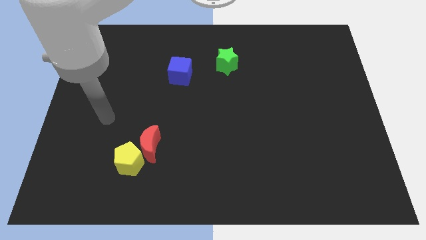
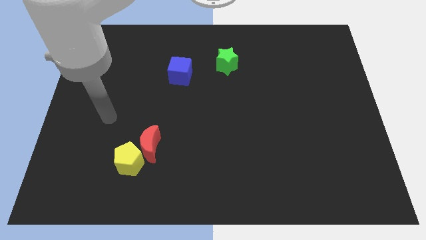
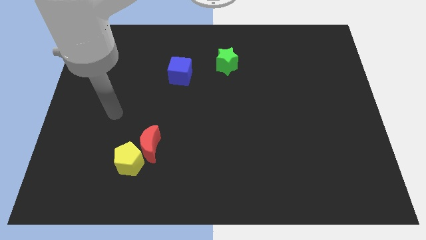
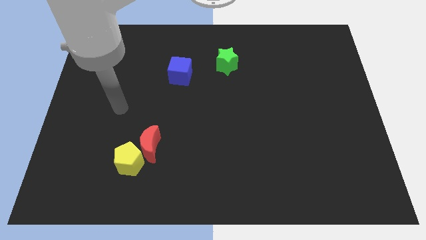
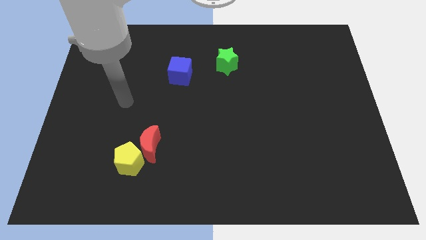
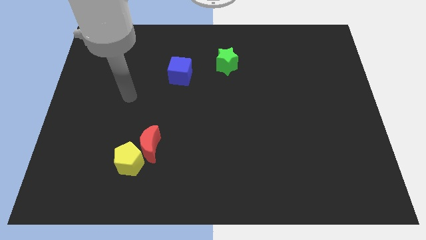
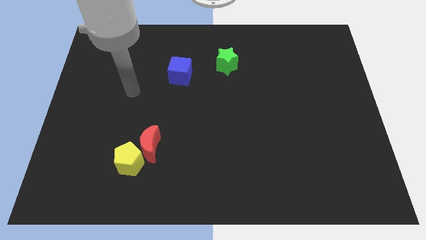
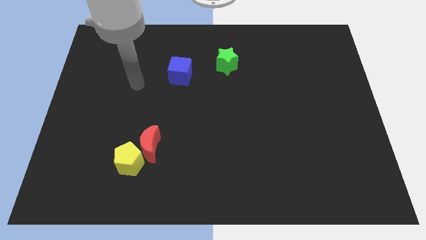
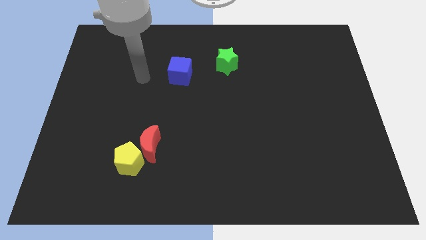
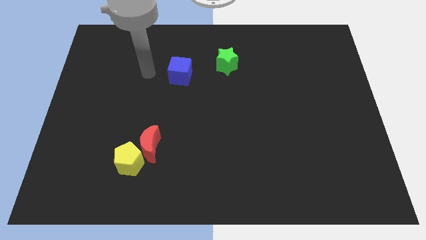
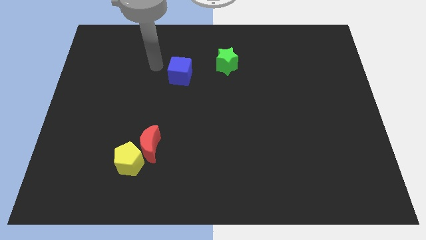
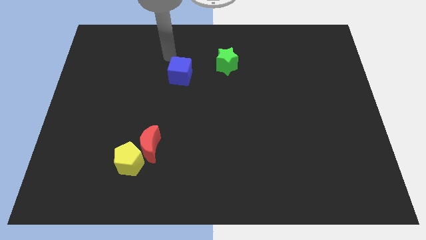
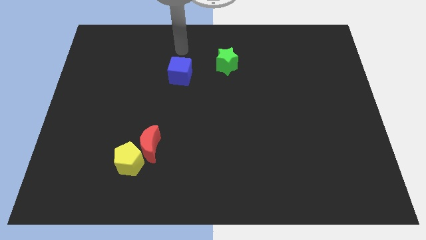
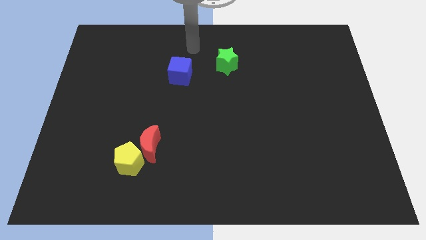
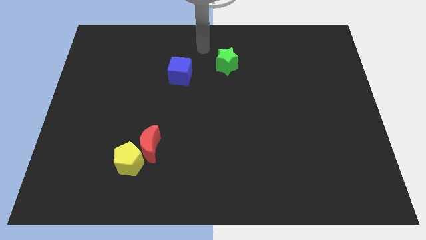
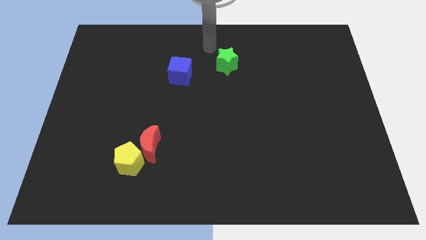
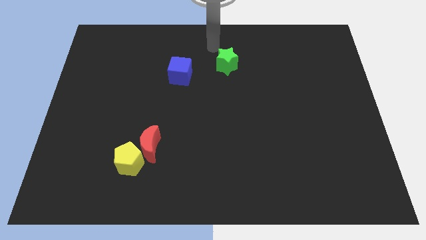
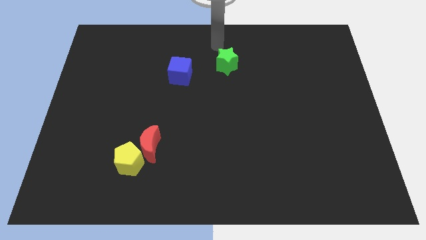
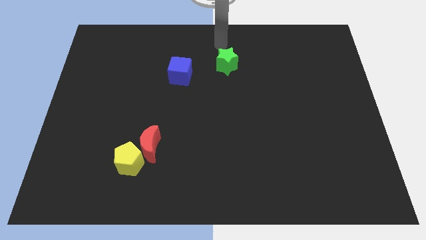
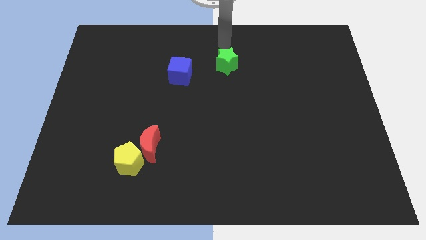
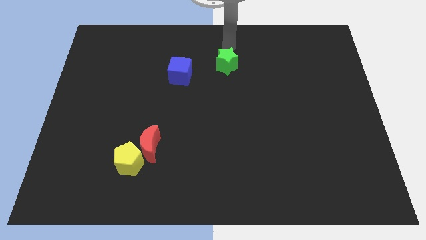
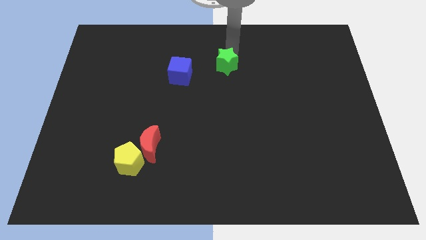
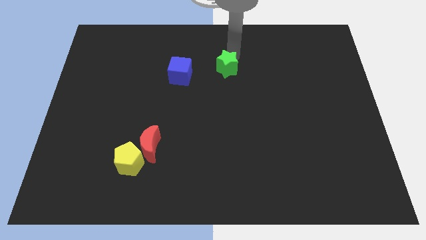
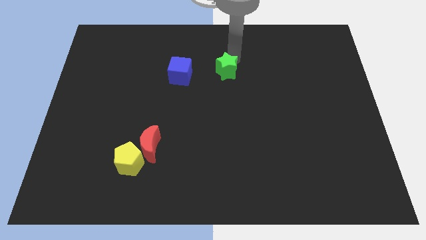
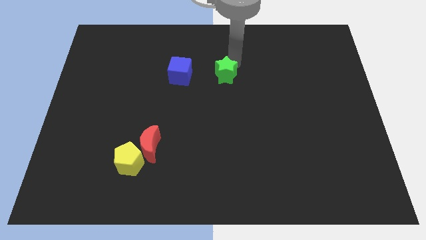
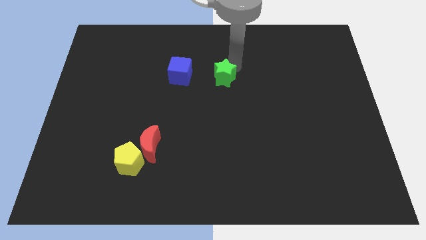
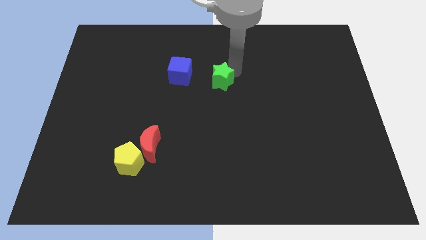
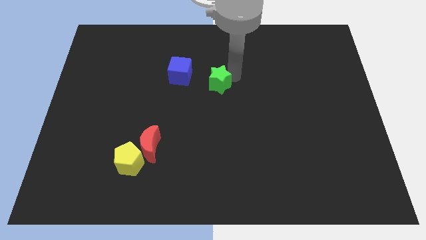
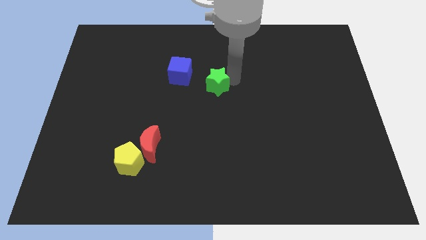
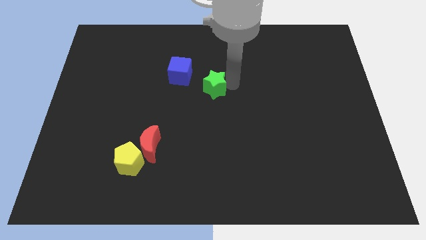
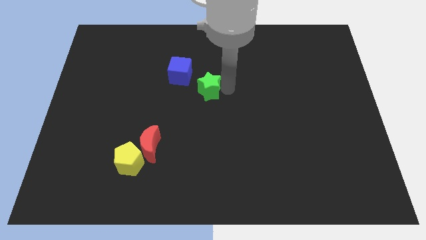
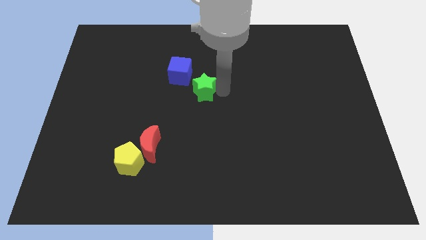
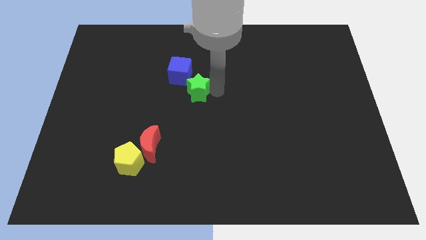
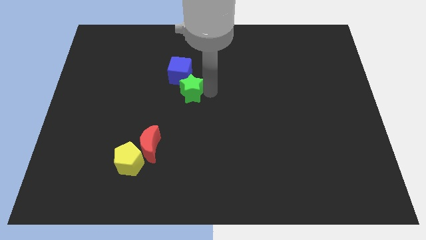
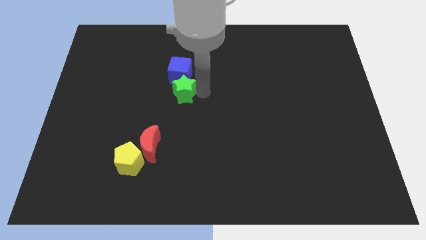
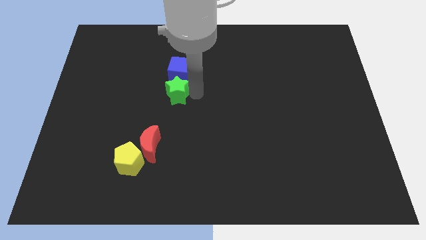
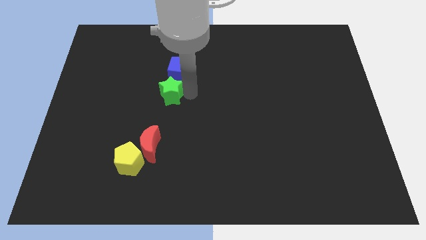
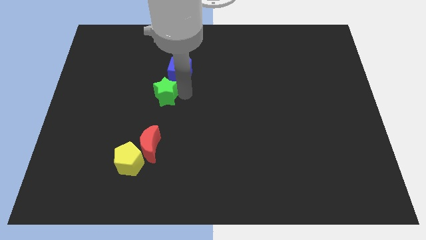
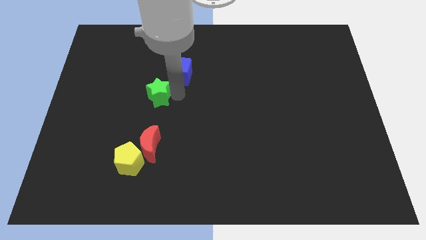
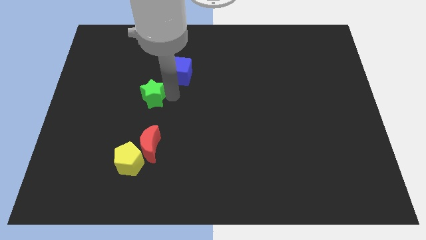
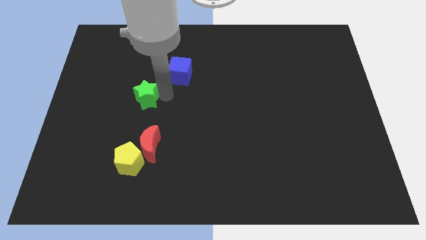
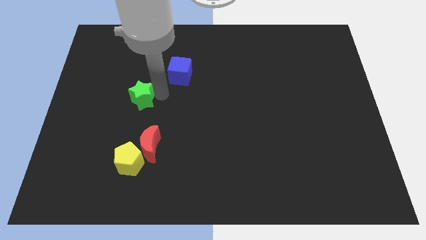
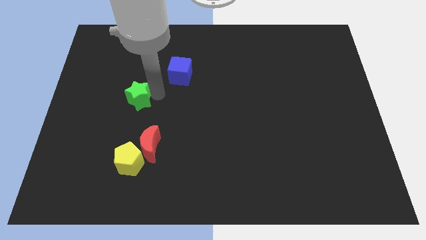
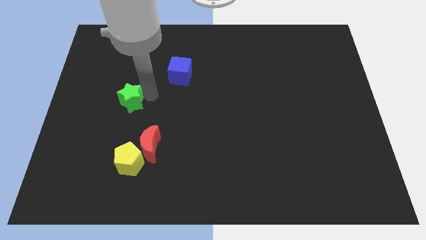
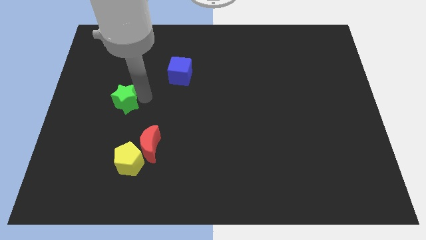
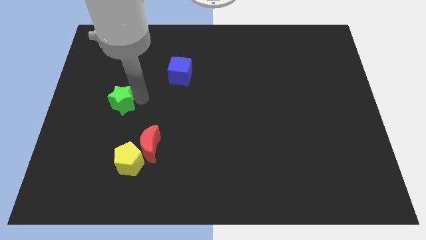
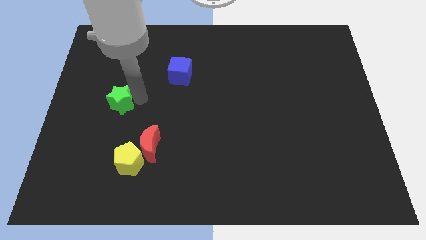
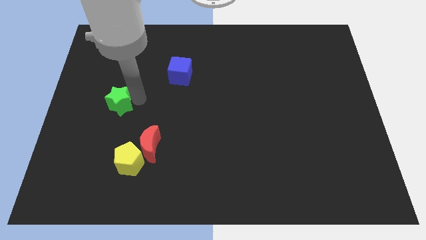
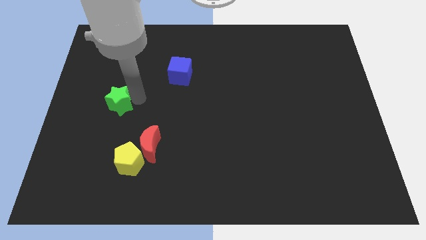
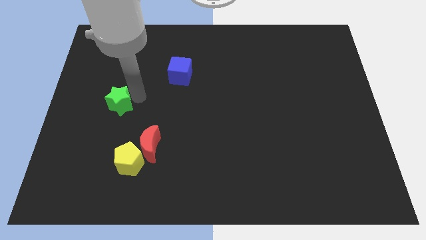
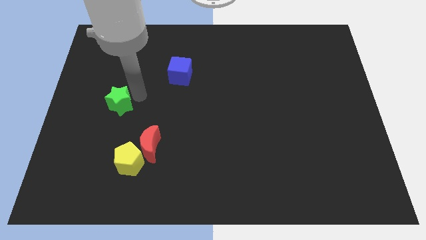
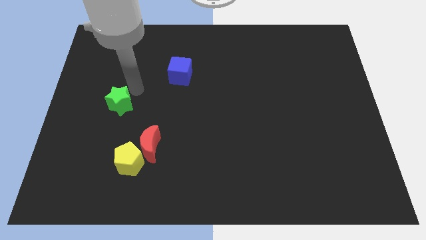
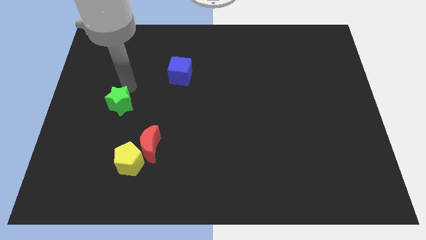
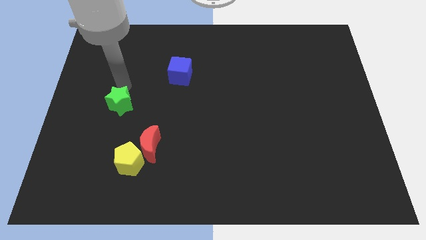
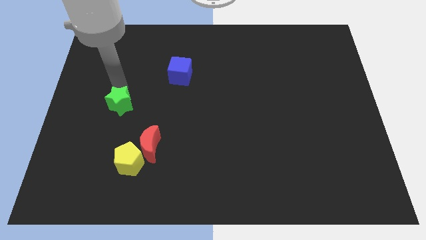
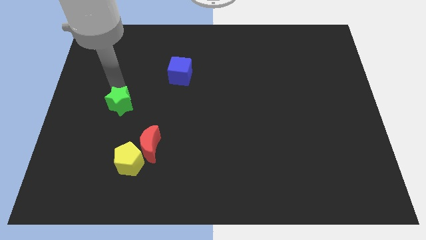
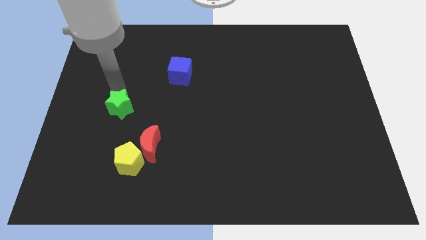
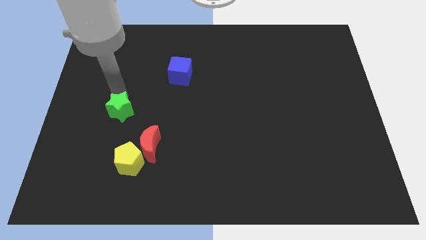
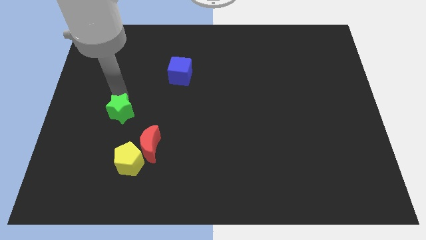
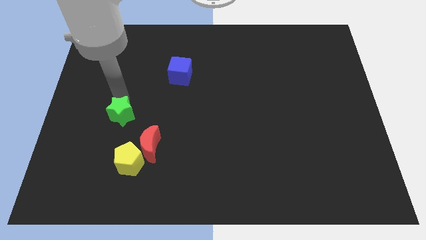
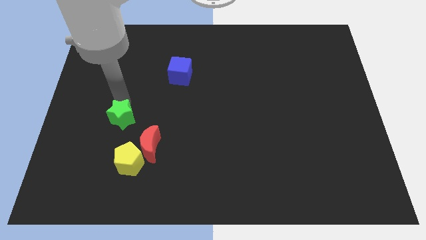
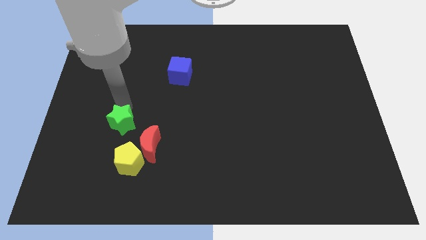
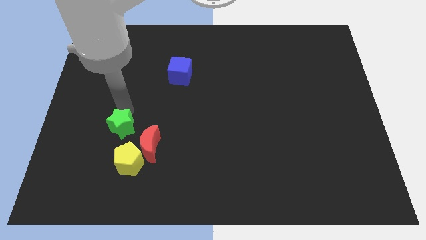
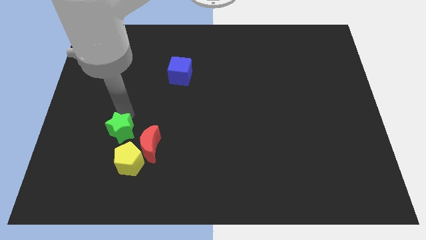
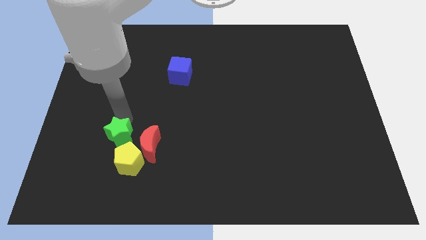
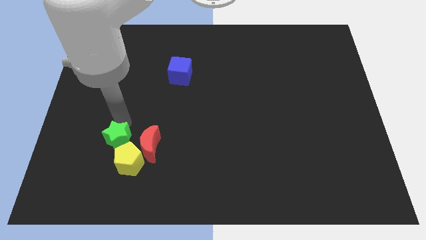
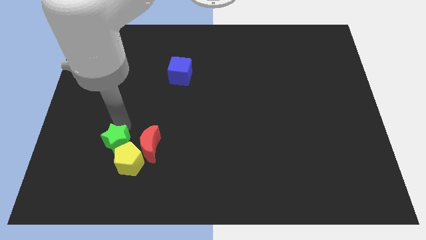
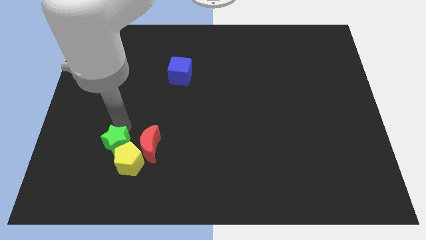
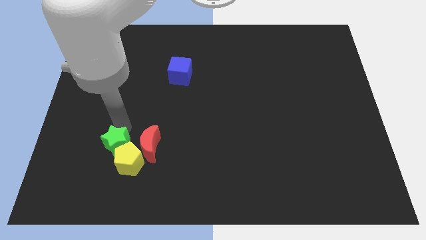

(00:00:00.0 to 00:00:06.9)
put the green star close to the yellow block

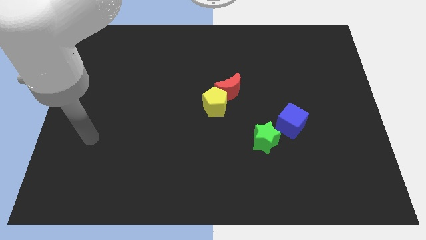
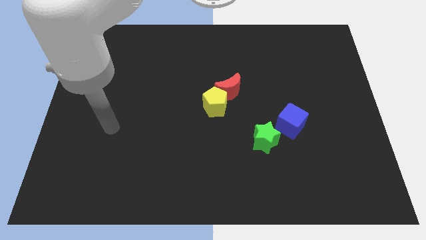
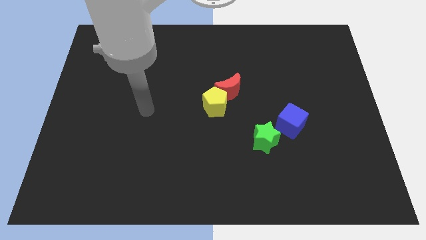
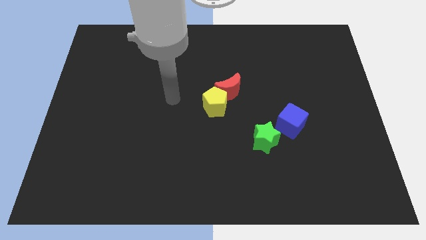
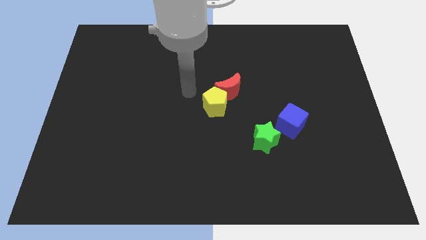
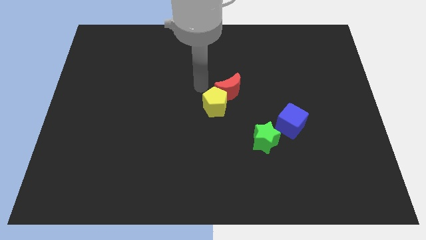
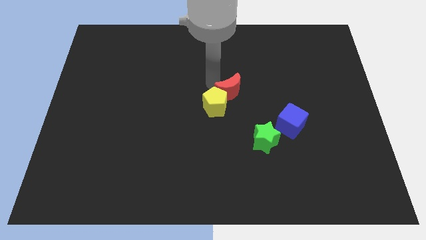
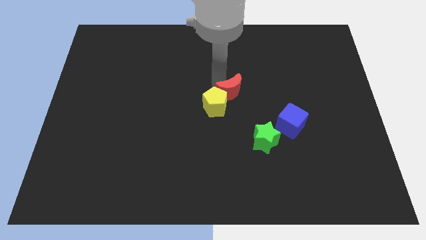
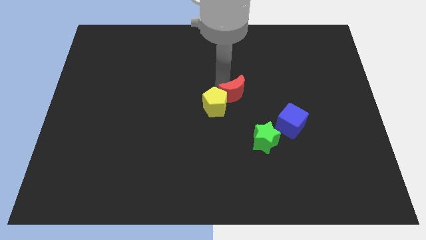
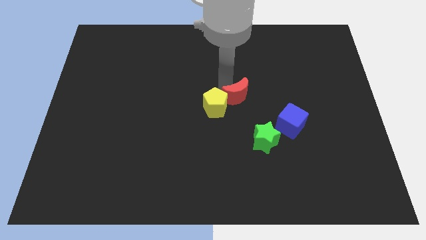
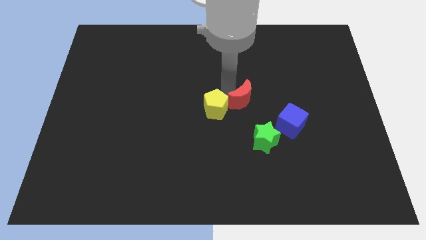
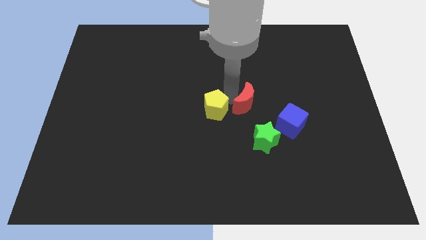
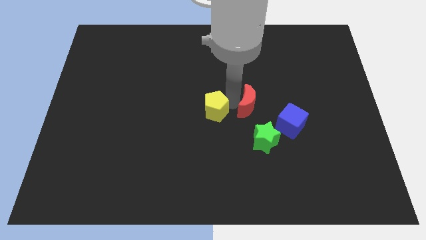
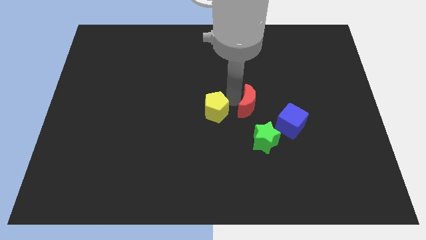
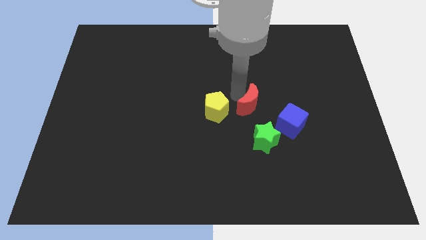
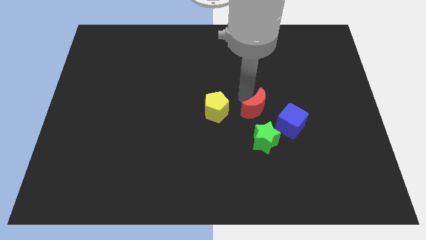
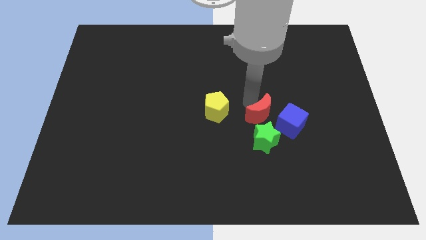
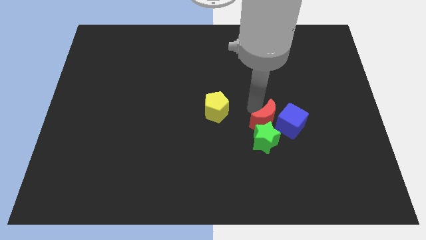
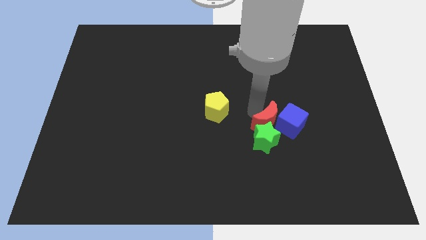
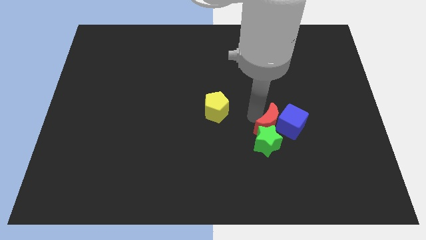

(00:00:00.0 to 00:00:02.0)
slide the red moon next to the star
